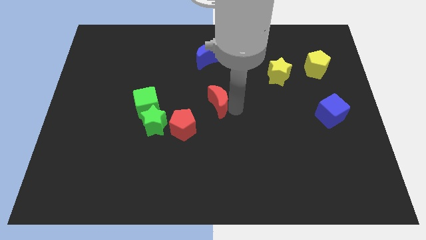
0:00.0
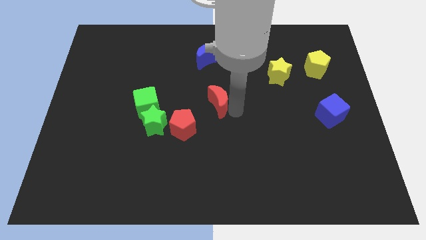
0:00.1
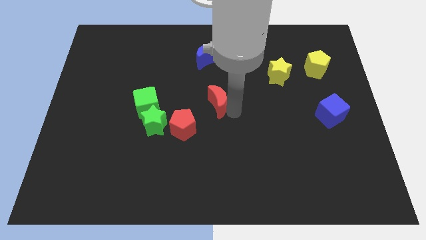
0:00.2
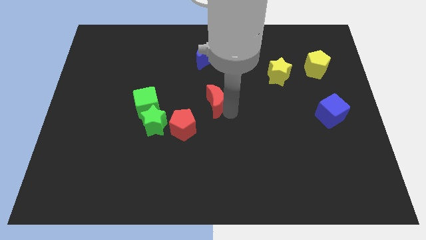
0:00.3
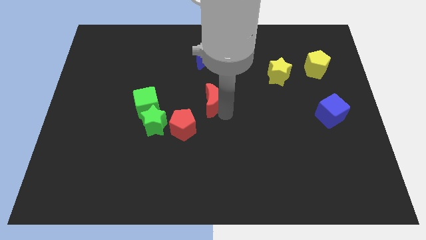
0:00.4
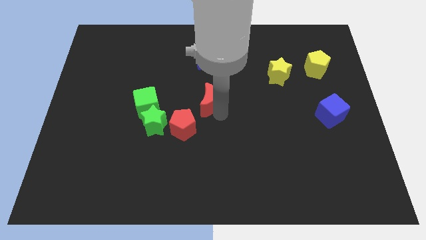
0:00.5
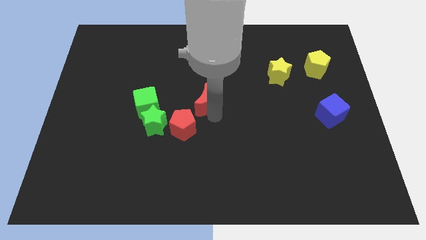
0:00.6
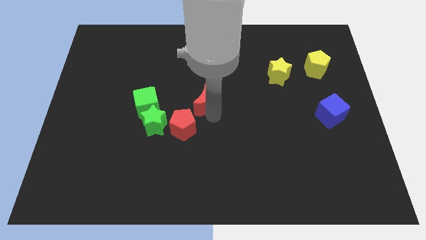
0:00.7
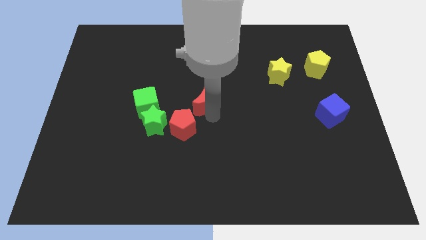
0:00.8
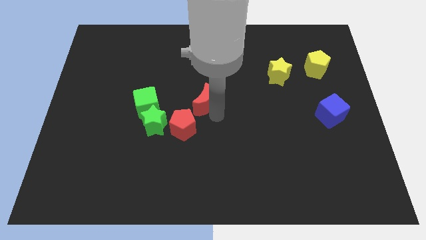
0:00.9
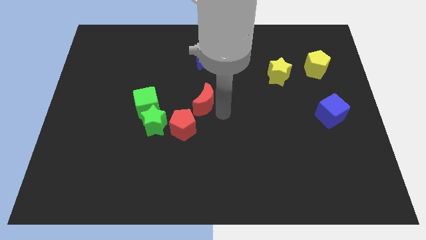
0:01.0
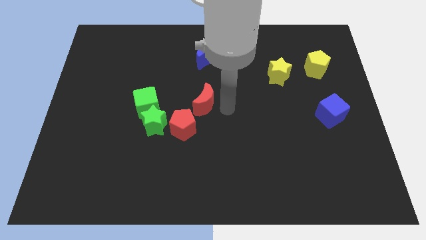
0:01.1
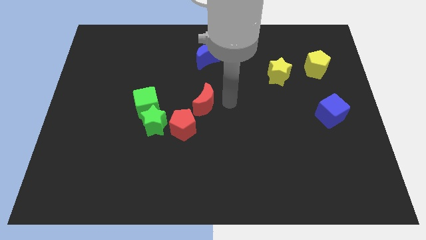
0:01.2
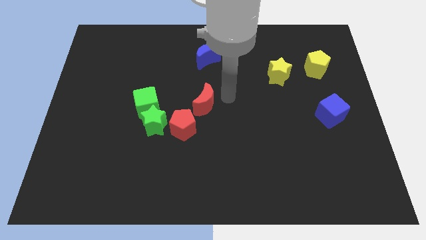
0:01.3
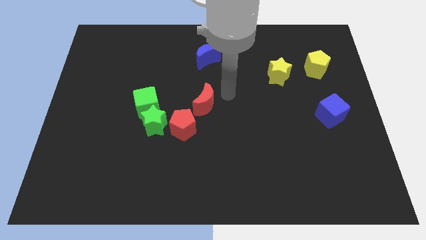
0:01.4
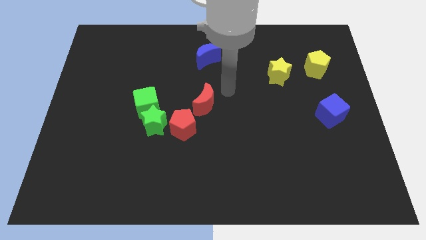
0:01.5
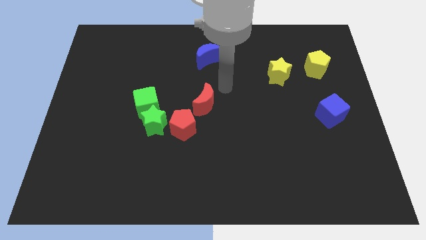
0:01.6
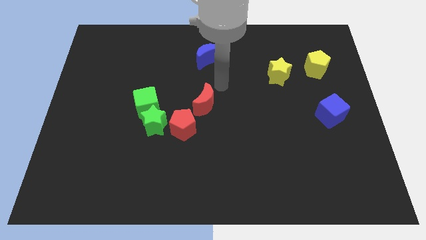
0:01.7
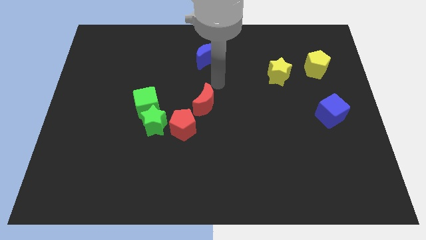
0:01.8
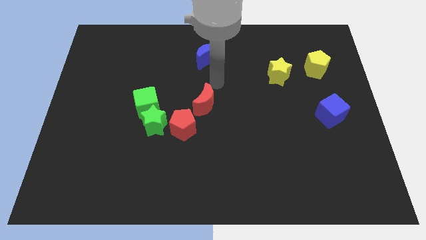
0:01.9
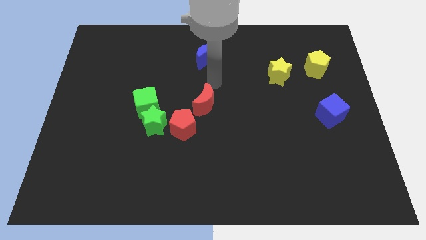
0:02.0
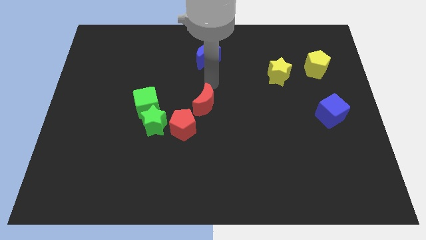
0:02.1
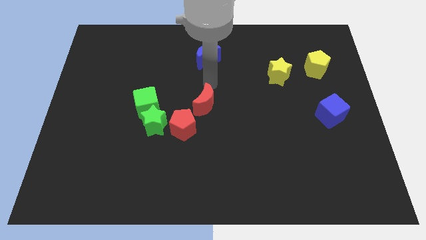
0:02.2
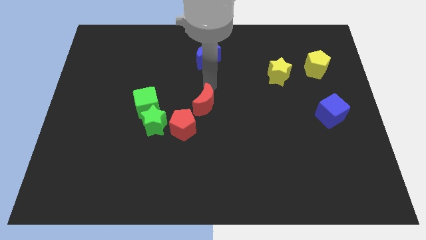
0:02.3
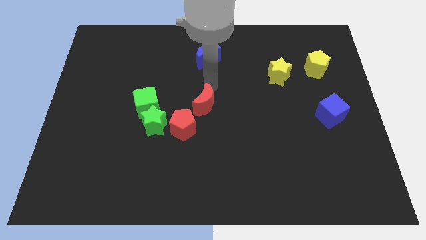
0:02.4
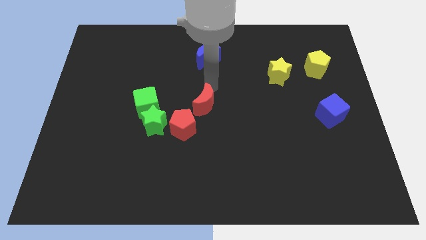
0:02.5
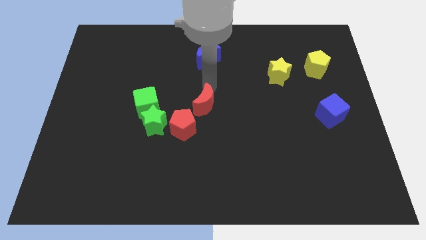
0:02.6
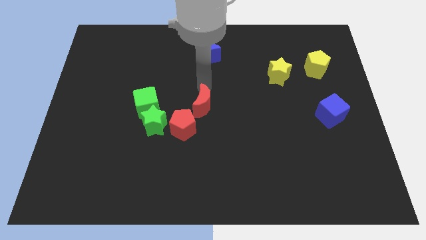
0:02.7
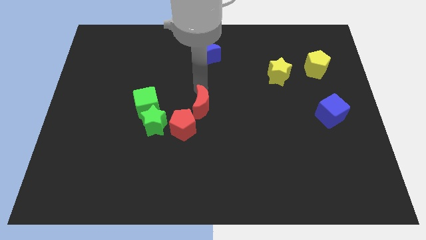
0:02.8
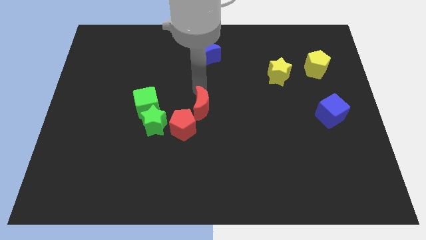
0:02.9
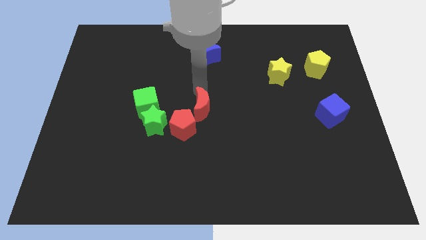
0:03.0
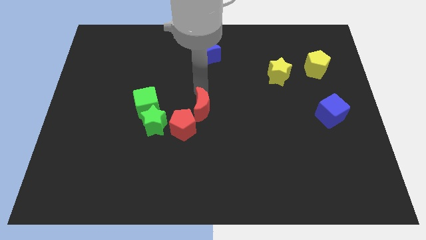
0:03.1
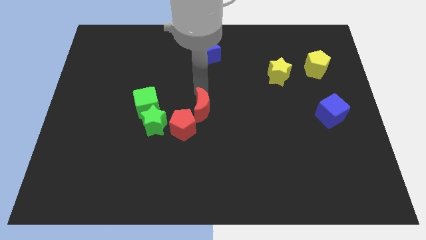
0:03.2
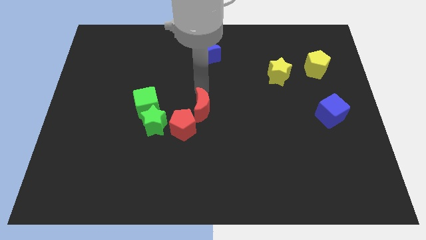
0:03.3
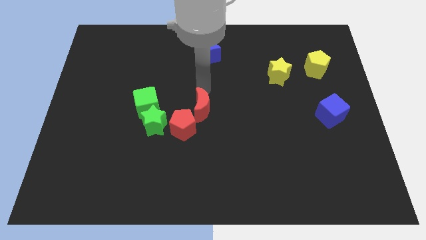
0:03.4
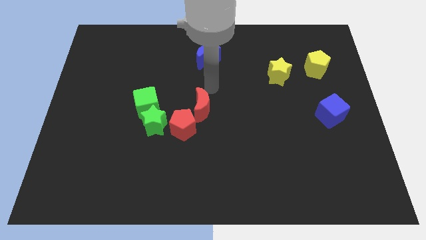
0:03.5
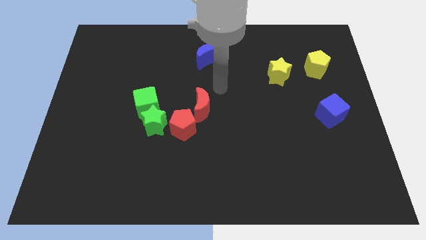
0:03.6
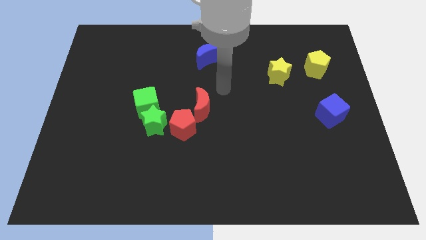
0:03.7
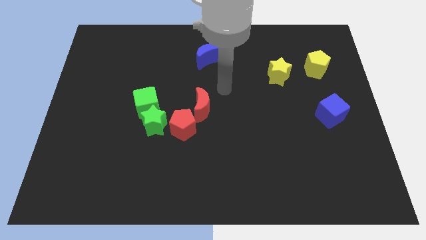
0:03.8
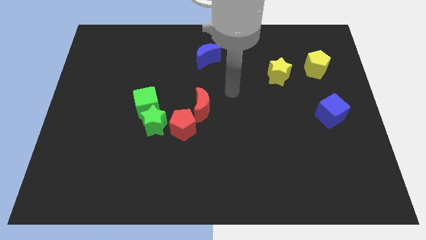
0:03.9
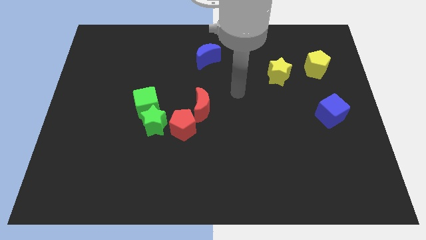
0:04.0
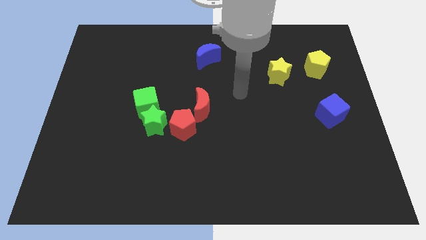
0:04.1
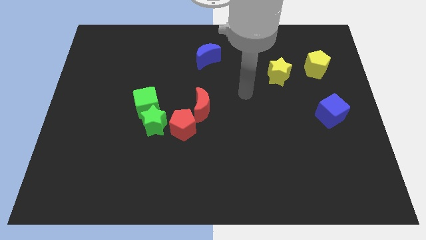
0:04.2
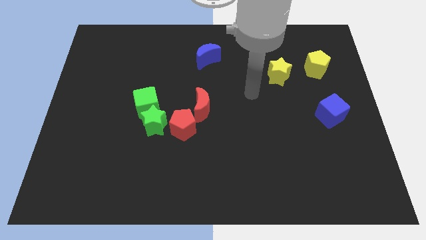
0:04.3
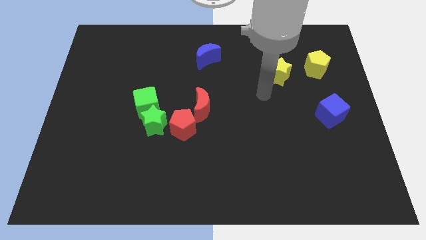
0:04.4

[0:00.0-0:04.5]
move the red moon to the top right side of the red pentagon

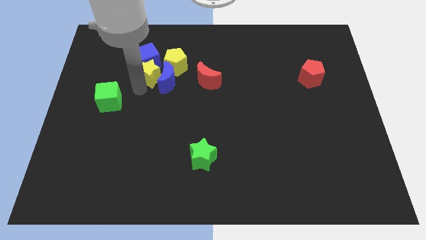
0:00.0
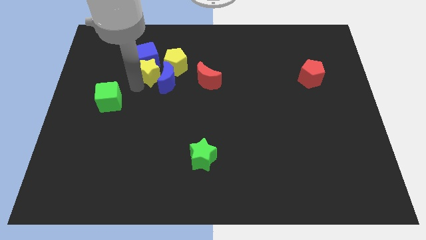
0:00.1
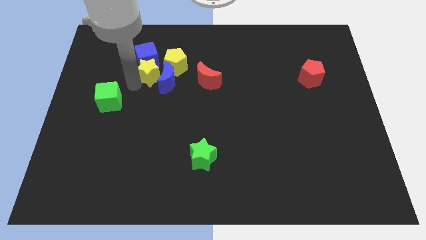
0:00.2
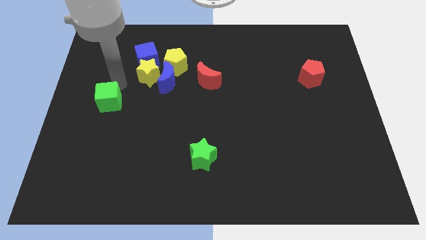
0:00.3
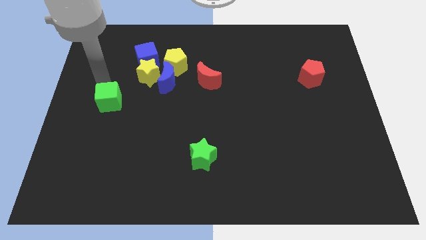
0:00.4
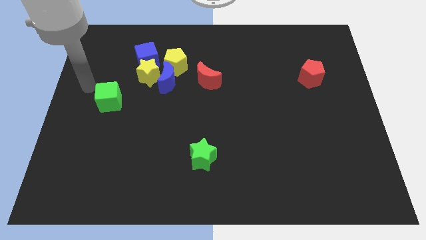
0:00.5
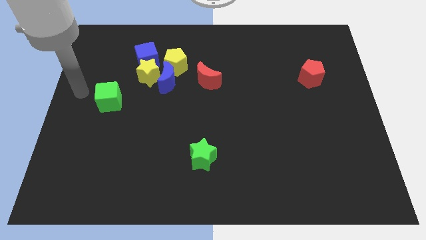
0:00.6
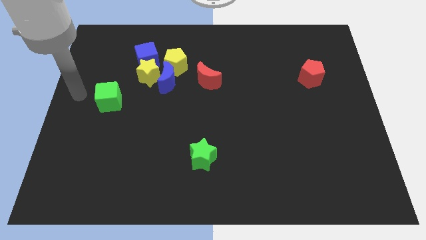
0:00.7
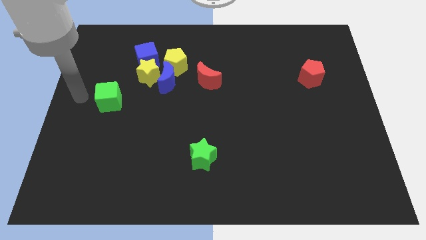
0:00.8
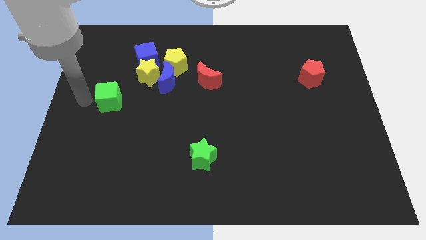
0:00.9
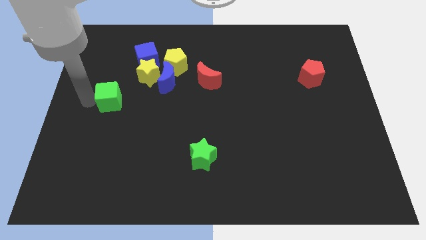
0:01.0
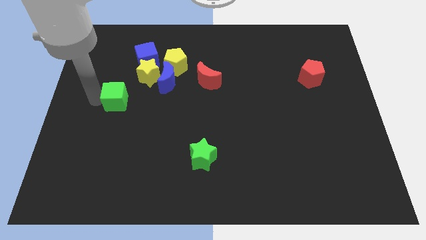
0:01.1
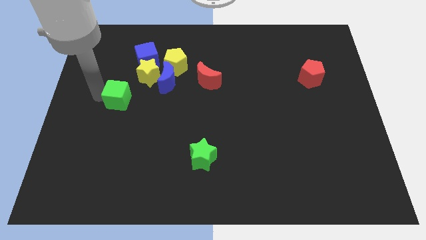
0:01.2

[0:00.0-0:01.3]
place the arm into the green cube

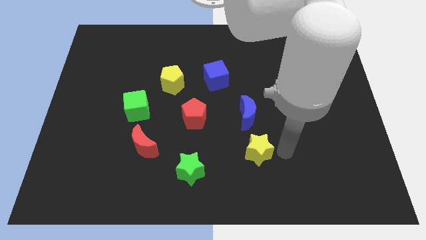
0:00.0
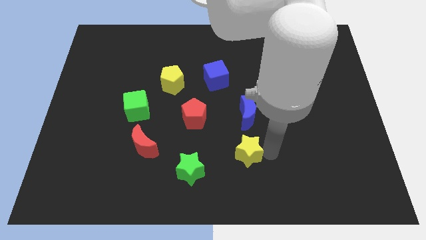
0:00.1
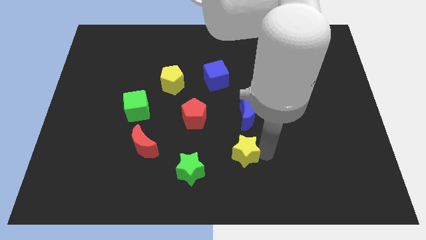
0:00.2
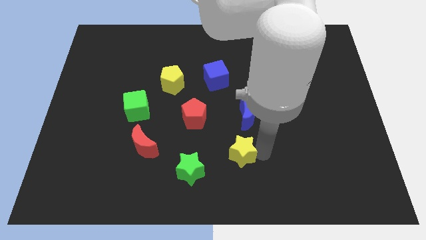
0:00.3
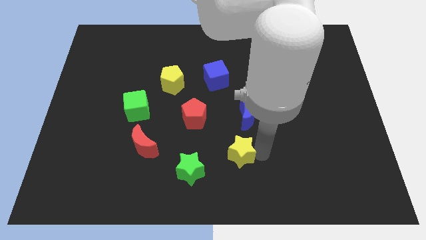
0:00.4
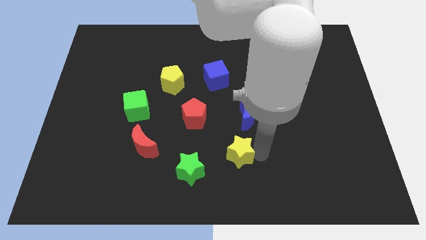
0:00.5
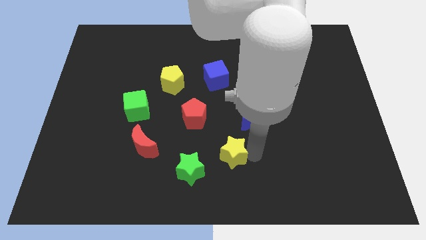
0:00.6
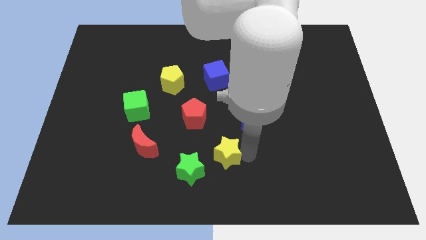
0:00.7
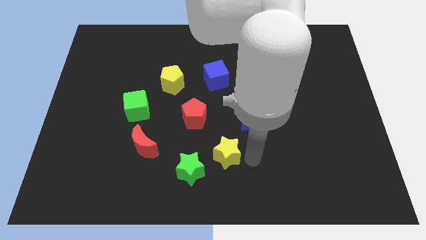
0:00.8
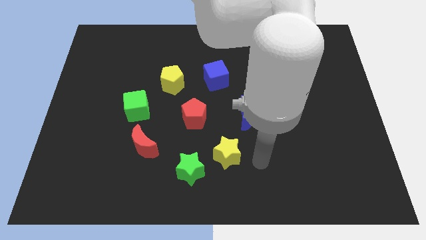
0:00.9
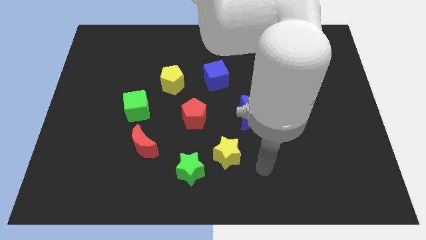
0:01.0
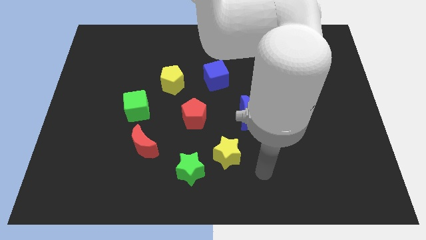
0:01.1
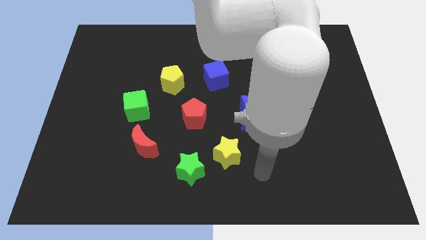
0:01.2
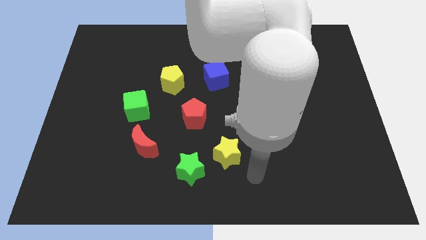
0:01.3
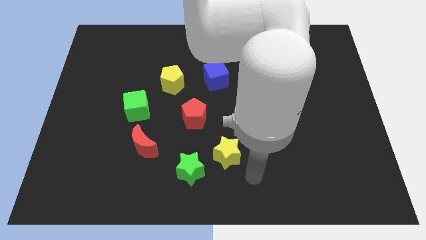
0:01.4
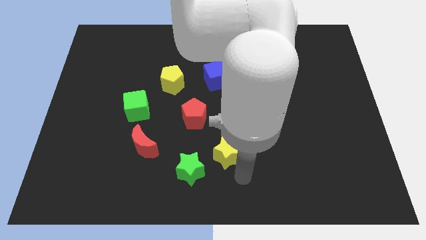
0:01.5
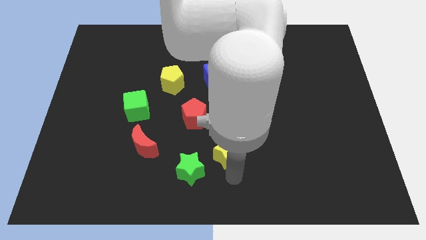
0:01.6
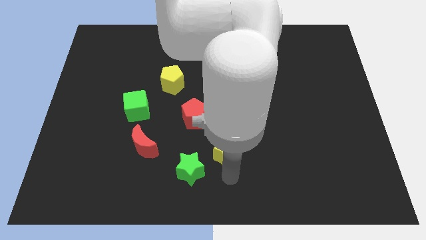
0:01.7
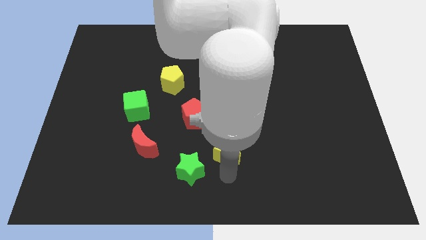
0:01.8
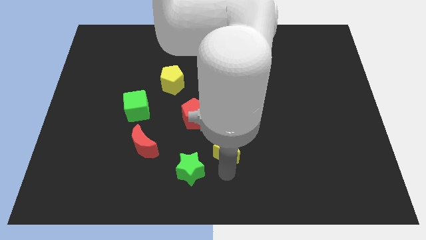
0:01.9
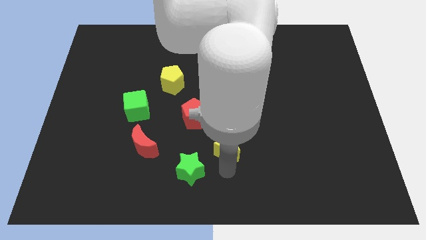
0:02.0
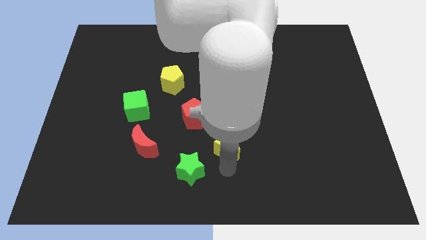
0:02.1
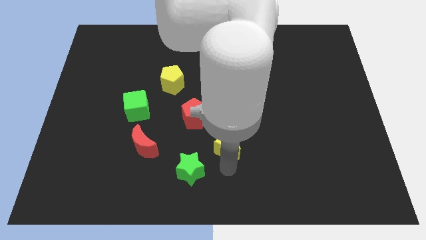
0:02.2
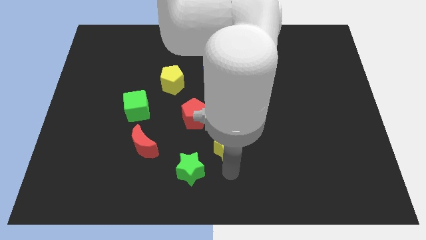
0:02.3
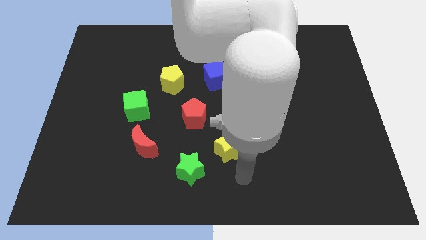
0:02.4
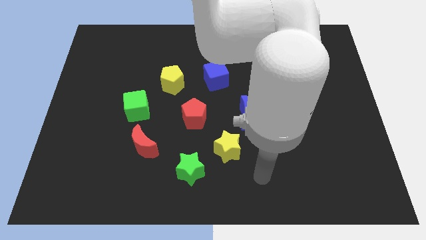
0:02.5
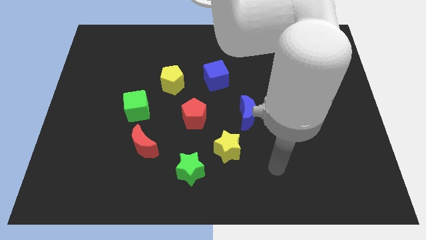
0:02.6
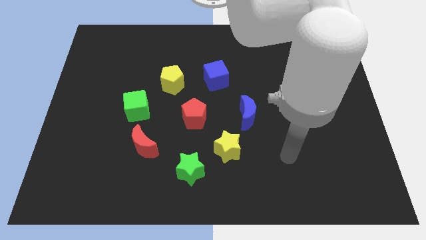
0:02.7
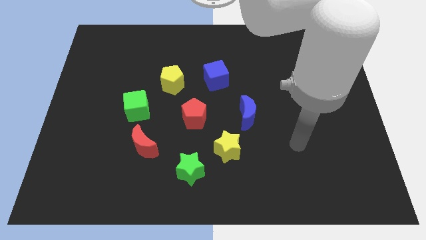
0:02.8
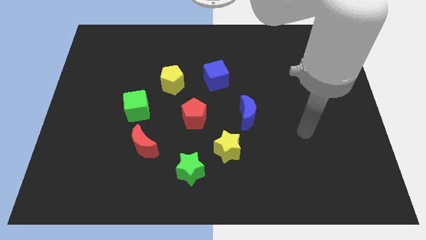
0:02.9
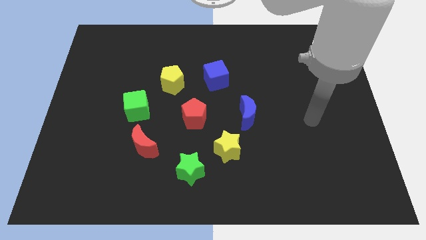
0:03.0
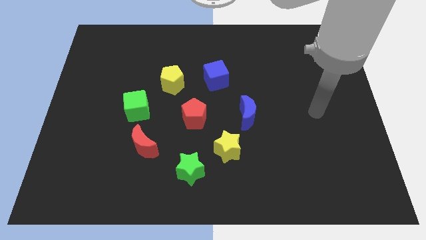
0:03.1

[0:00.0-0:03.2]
adjust the yellow star diagonally to the top right of the green star
